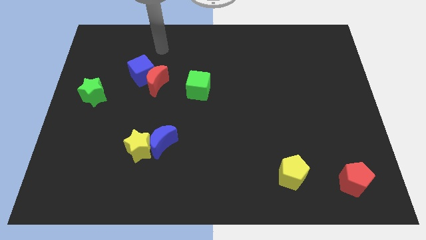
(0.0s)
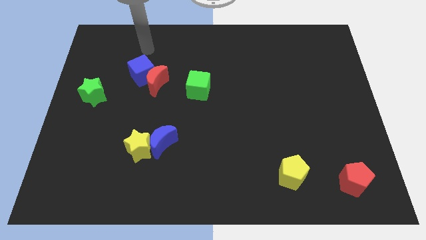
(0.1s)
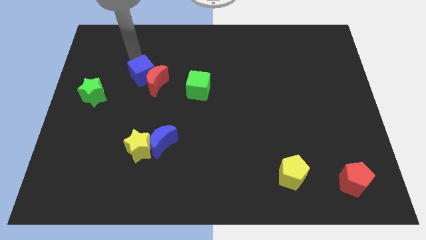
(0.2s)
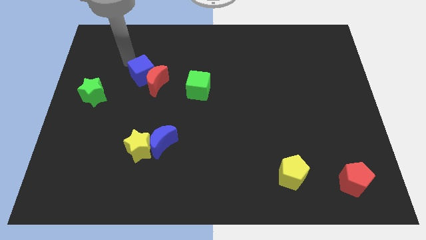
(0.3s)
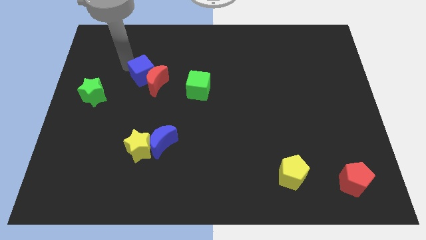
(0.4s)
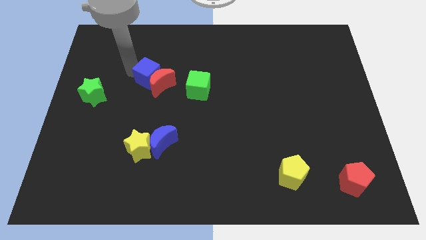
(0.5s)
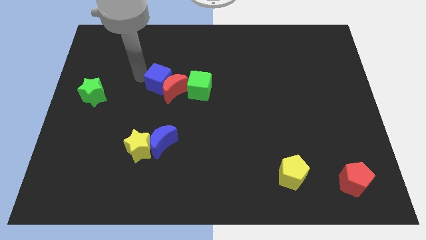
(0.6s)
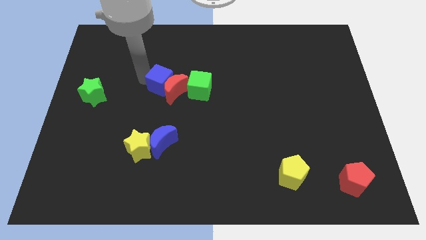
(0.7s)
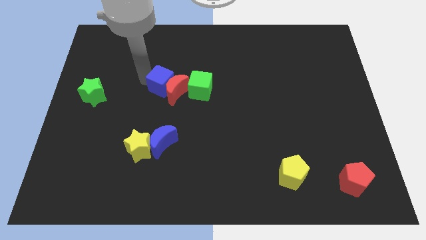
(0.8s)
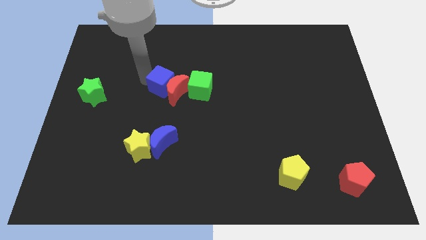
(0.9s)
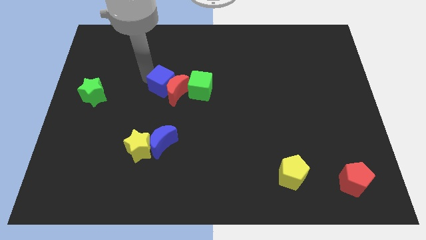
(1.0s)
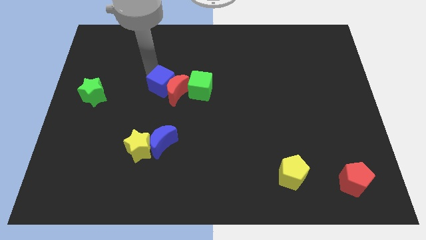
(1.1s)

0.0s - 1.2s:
push the blue cube and red moon towards the green cube

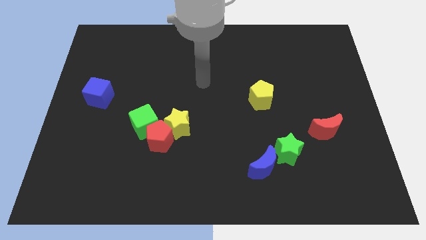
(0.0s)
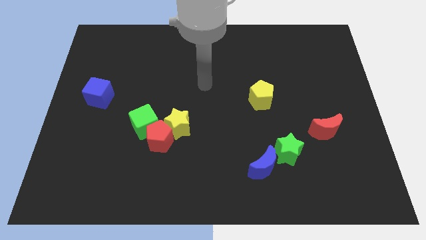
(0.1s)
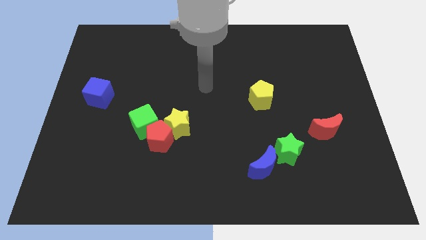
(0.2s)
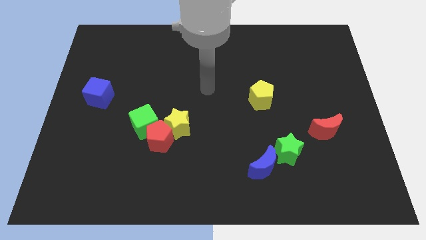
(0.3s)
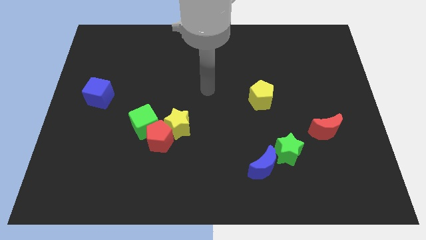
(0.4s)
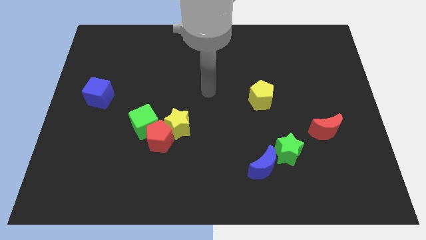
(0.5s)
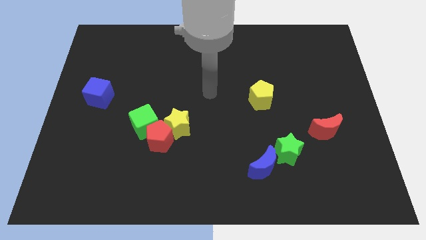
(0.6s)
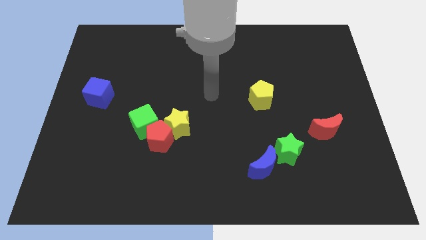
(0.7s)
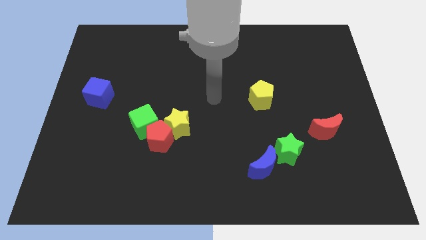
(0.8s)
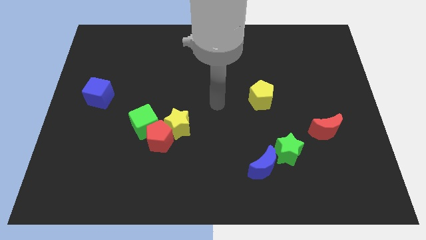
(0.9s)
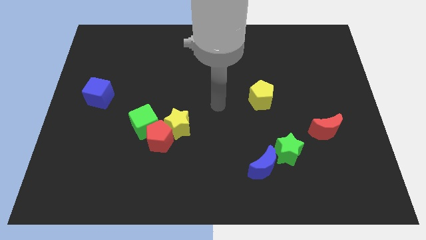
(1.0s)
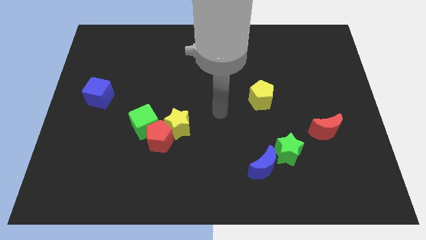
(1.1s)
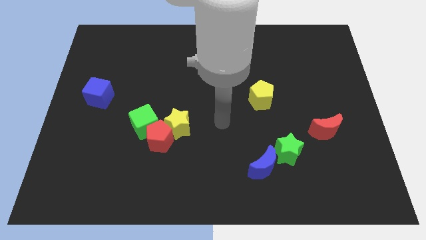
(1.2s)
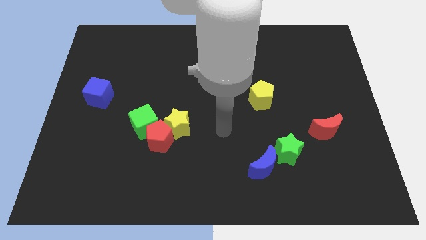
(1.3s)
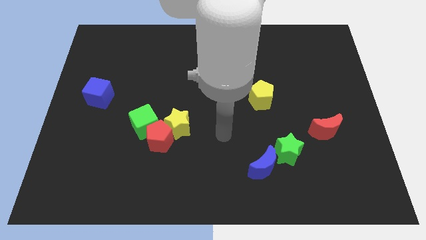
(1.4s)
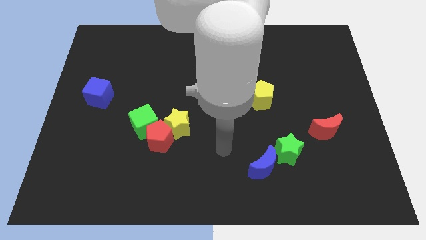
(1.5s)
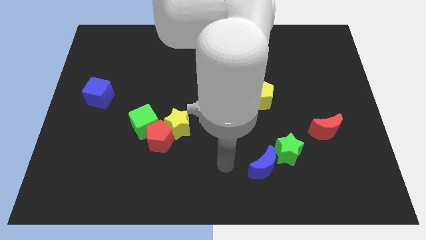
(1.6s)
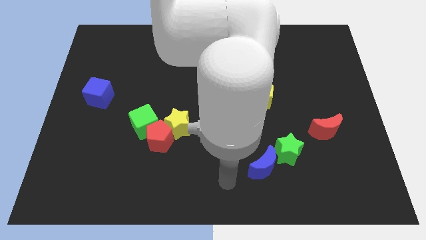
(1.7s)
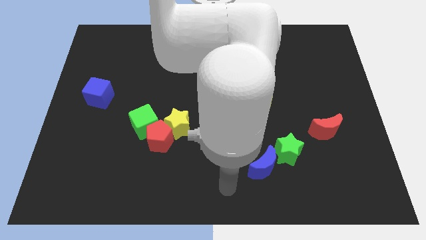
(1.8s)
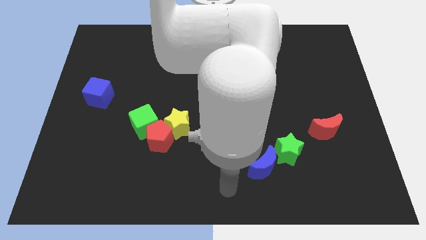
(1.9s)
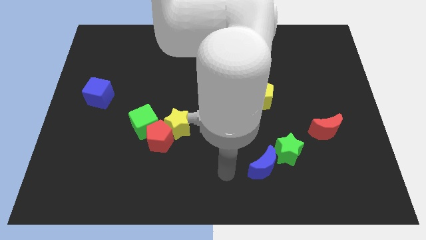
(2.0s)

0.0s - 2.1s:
move your hand to the bottom center

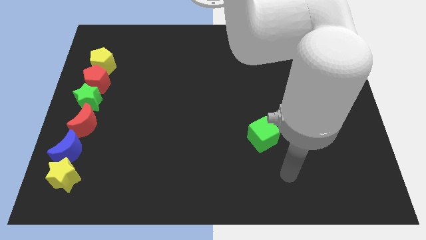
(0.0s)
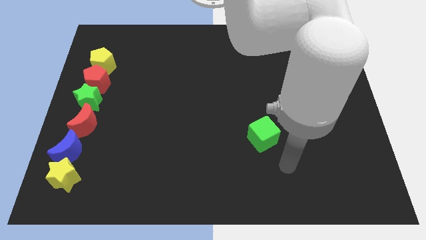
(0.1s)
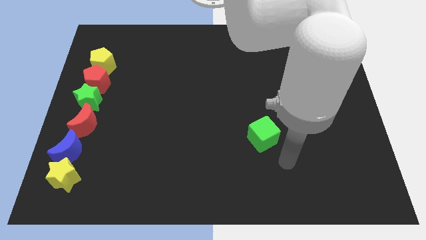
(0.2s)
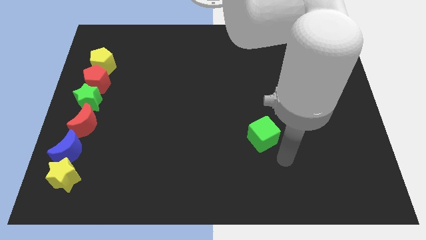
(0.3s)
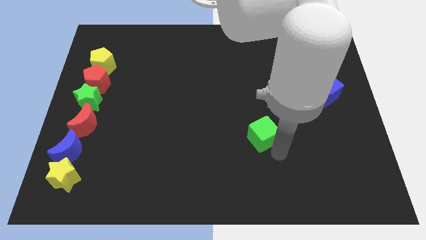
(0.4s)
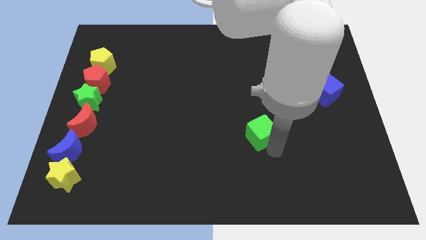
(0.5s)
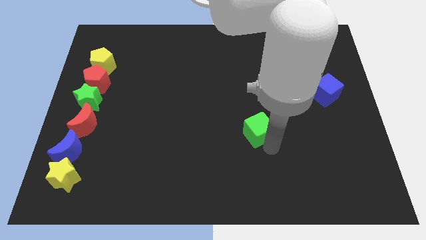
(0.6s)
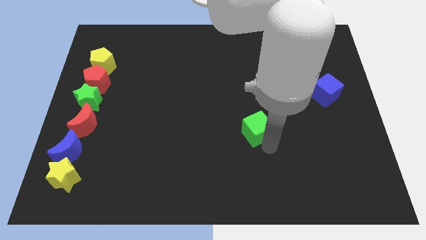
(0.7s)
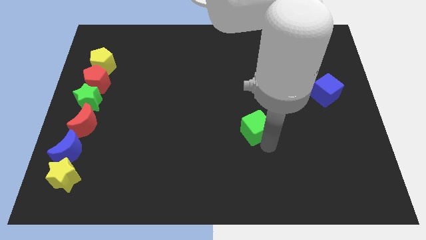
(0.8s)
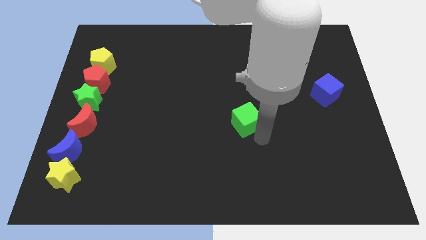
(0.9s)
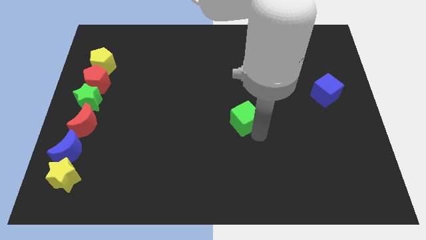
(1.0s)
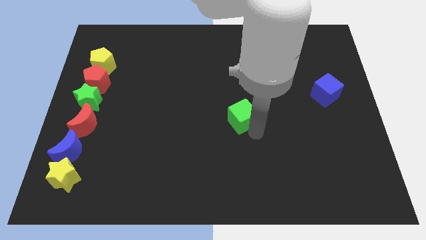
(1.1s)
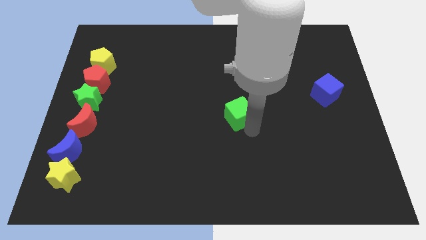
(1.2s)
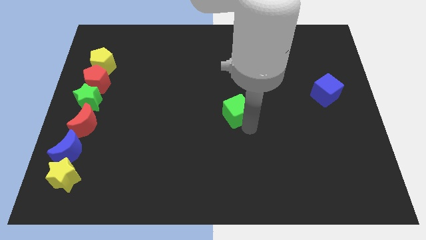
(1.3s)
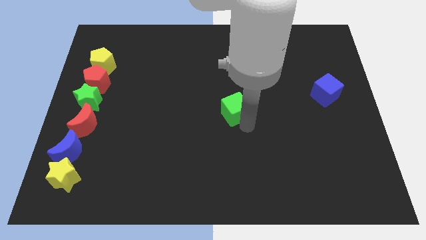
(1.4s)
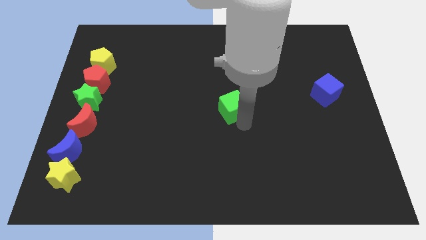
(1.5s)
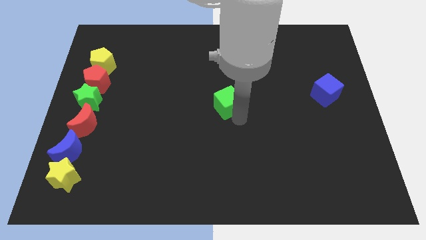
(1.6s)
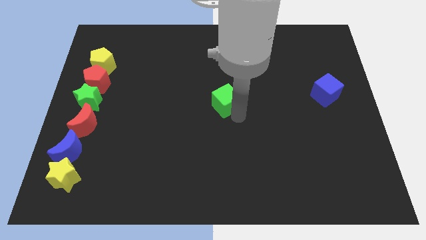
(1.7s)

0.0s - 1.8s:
push the green cube slightly to the top left of the board

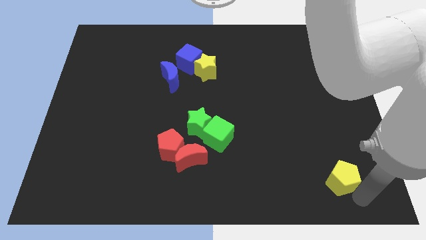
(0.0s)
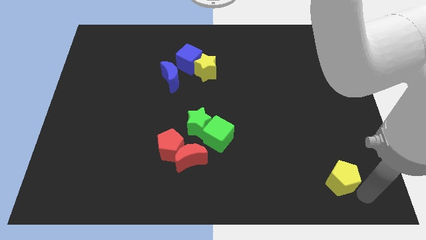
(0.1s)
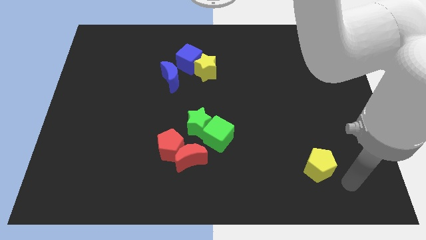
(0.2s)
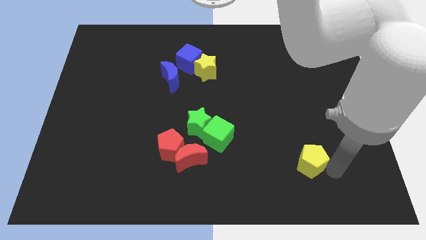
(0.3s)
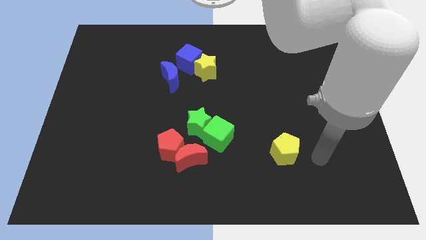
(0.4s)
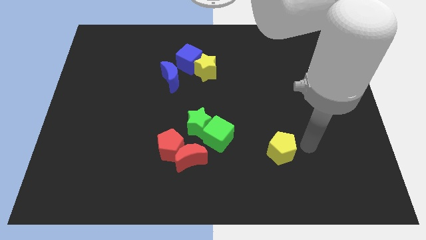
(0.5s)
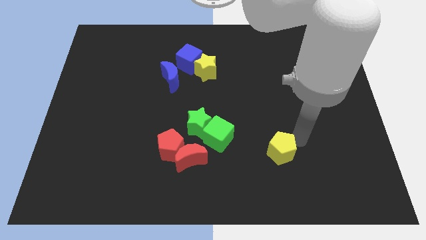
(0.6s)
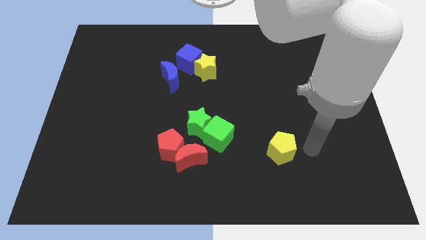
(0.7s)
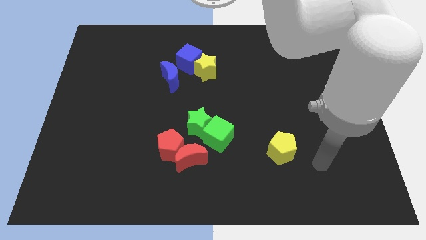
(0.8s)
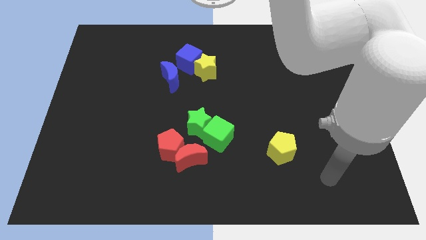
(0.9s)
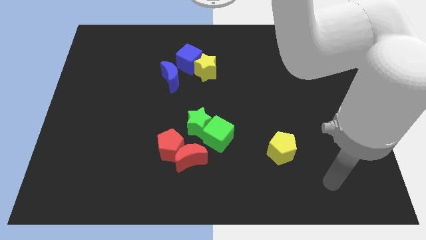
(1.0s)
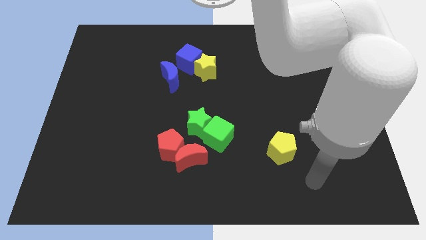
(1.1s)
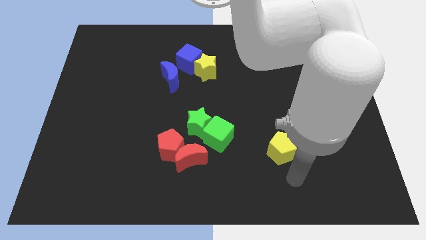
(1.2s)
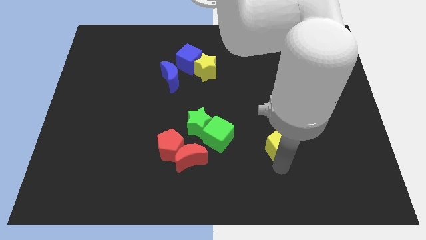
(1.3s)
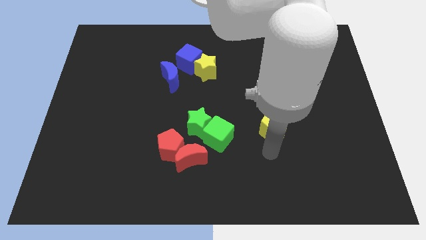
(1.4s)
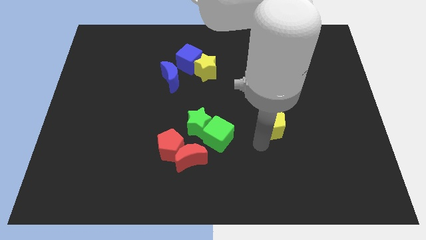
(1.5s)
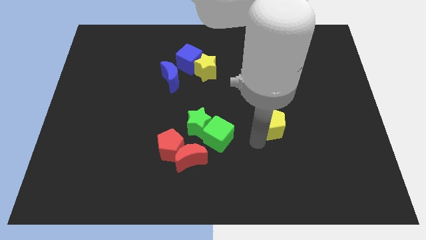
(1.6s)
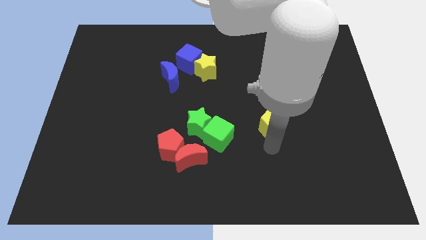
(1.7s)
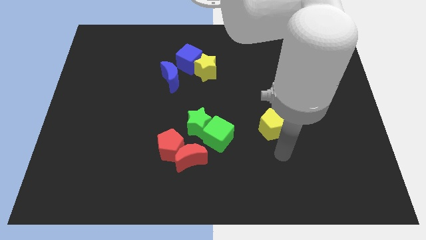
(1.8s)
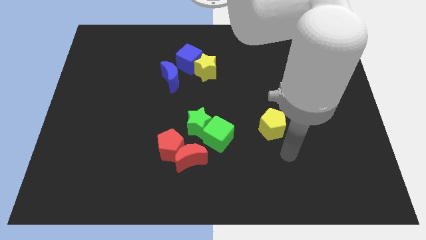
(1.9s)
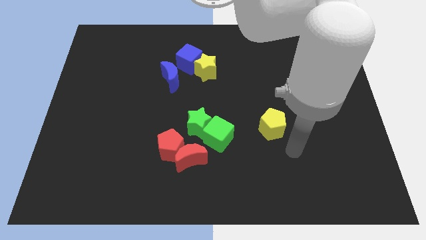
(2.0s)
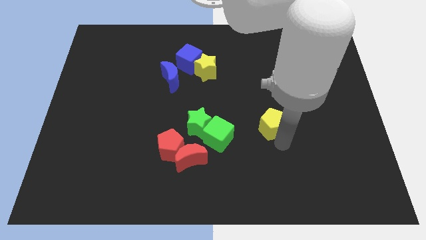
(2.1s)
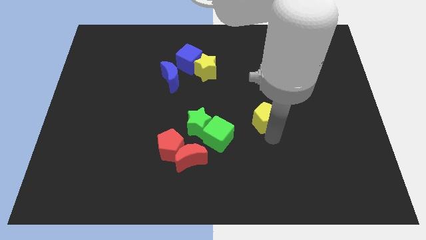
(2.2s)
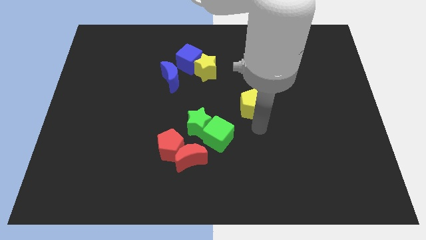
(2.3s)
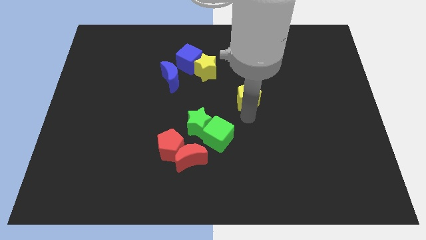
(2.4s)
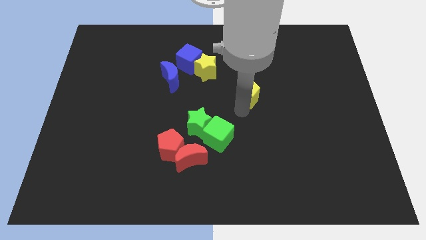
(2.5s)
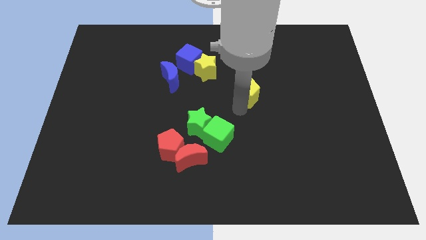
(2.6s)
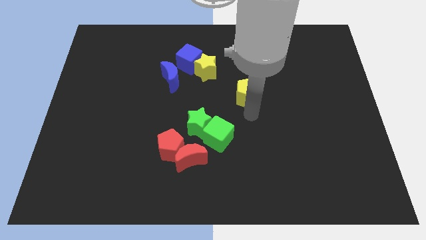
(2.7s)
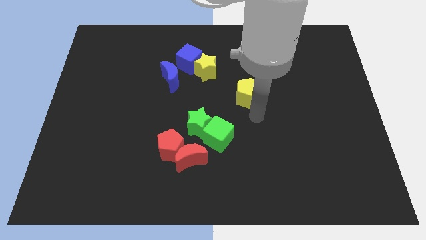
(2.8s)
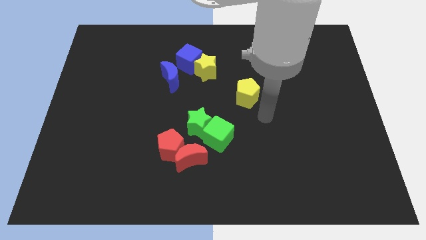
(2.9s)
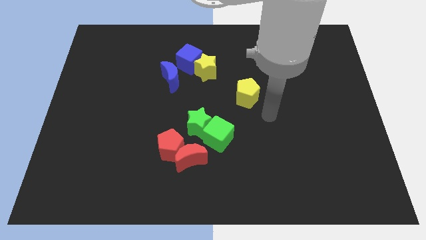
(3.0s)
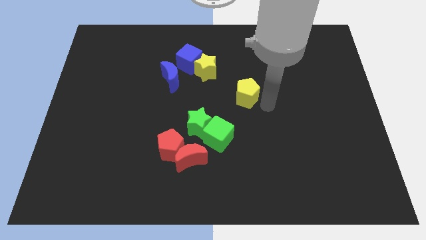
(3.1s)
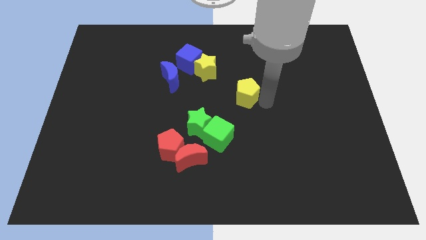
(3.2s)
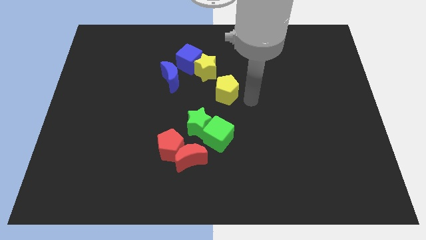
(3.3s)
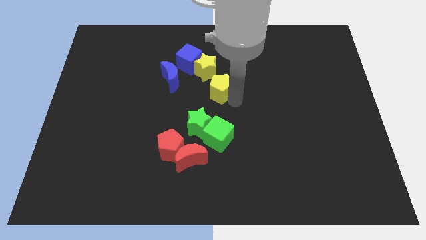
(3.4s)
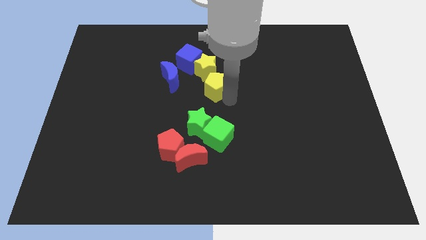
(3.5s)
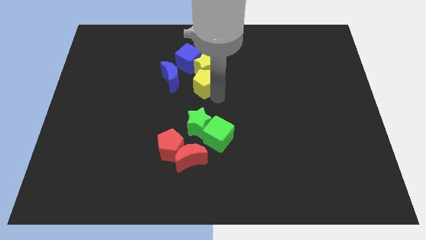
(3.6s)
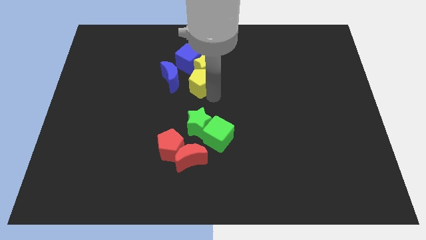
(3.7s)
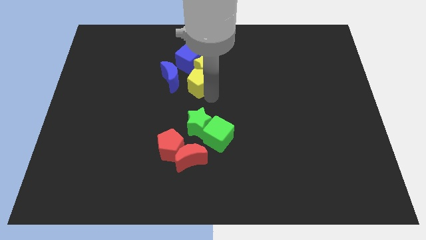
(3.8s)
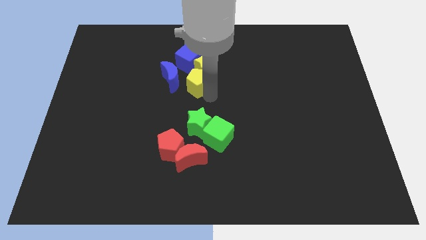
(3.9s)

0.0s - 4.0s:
move yellow pentagon near yellow star

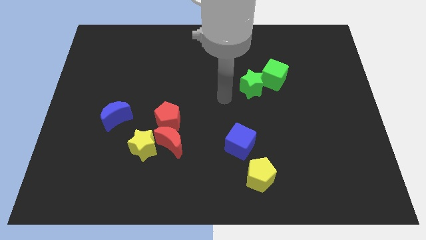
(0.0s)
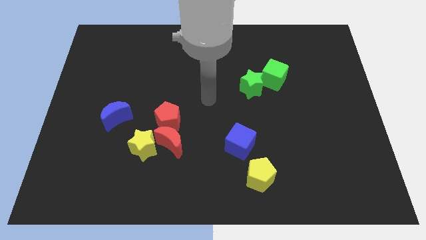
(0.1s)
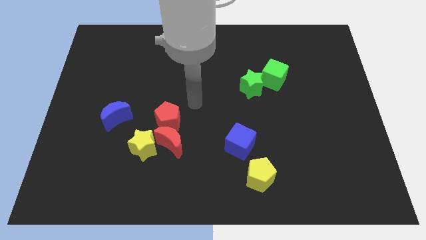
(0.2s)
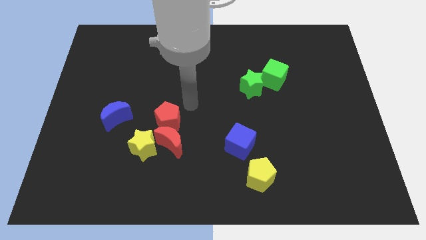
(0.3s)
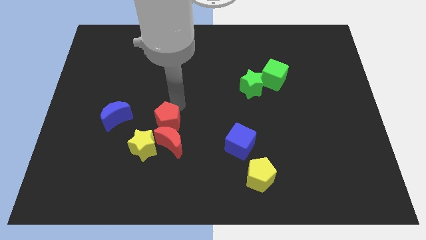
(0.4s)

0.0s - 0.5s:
point the arm to the top right of the red pentagon
